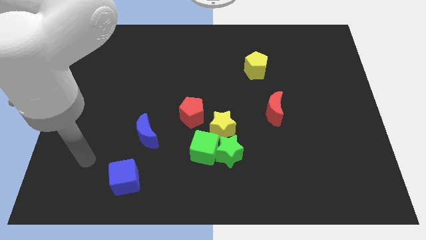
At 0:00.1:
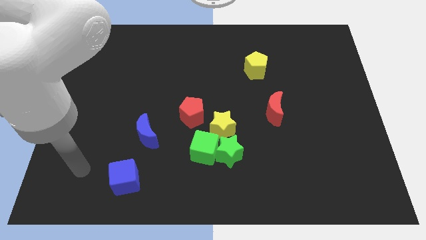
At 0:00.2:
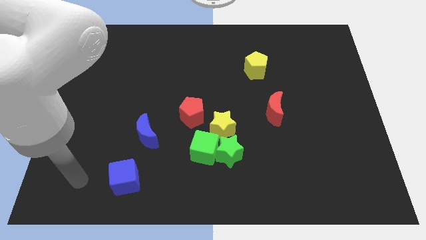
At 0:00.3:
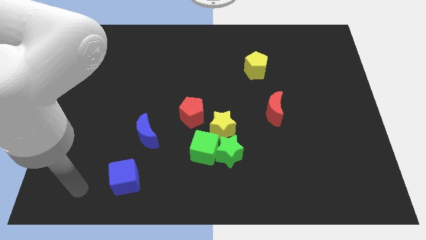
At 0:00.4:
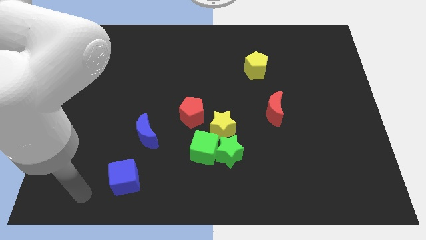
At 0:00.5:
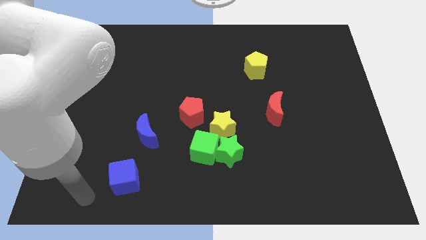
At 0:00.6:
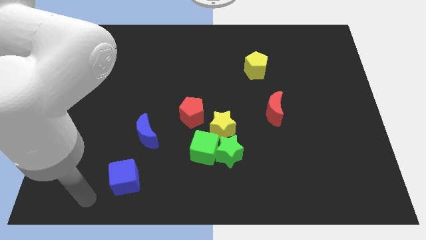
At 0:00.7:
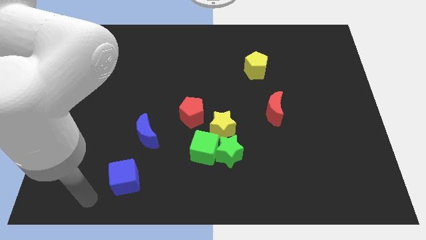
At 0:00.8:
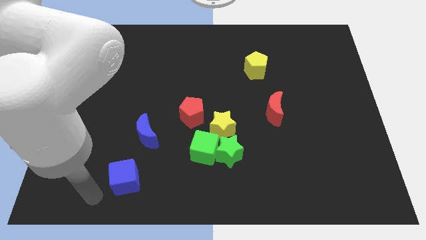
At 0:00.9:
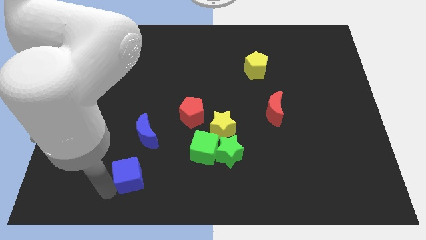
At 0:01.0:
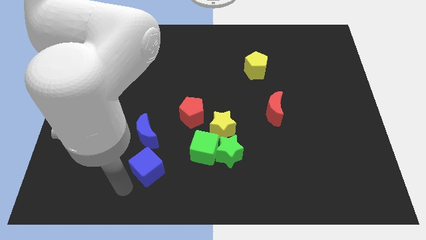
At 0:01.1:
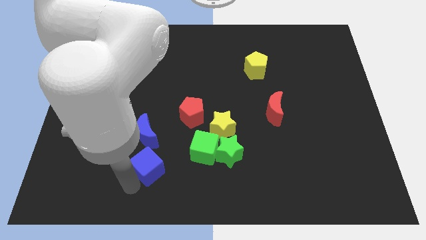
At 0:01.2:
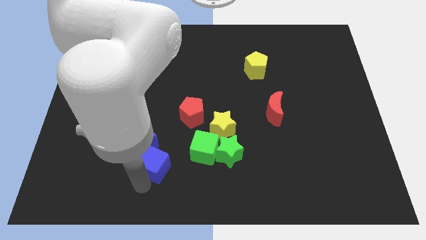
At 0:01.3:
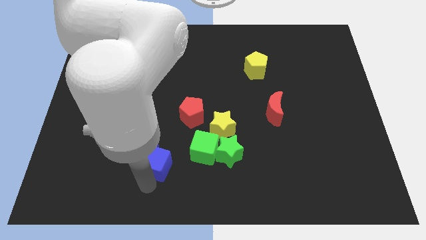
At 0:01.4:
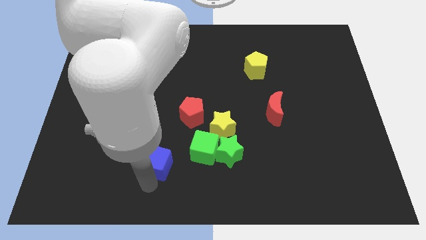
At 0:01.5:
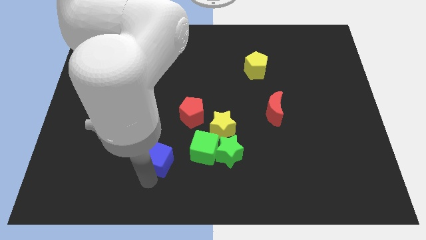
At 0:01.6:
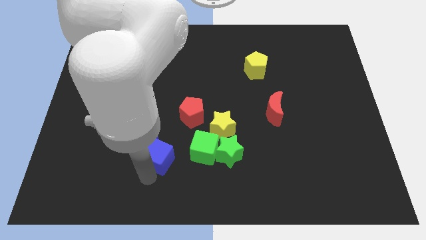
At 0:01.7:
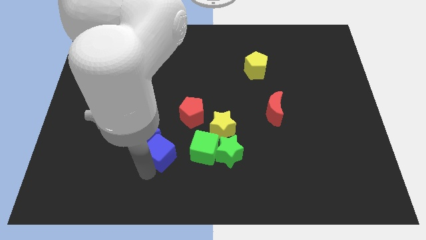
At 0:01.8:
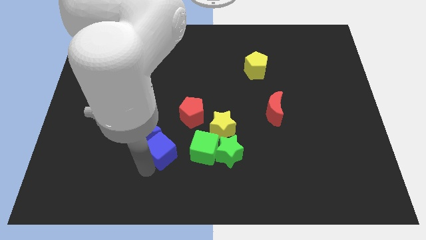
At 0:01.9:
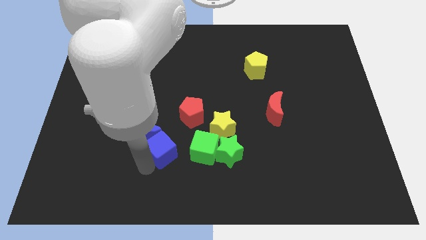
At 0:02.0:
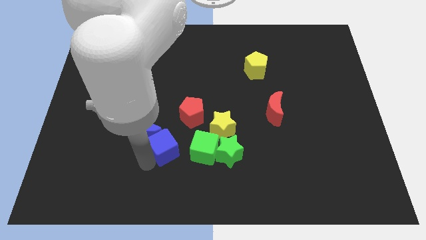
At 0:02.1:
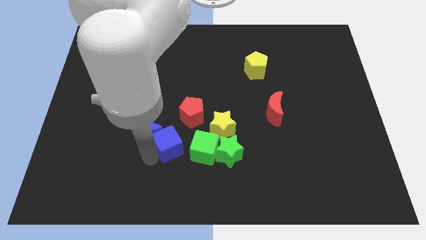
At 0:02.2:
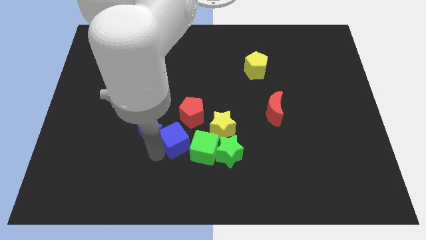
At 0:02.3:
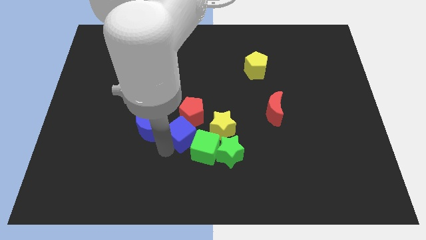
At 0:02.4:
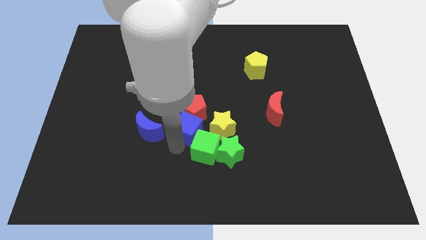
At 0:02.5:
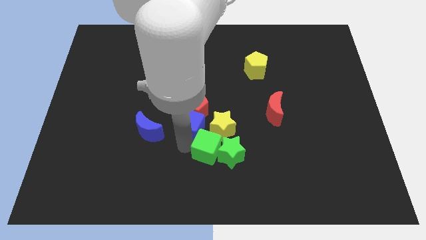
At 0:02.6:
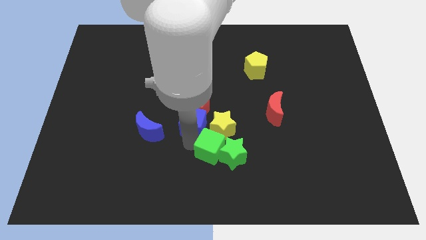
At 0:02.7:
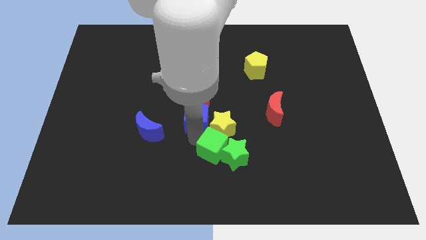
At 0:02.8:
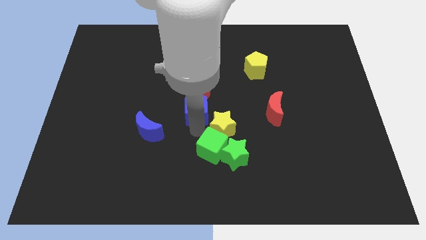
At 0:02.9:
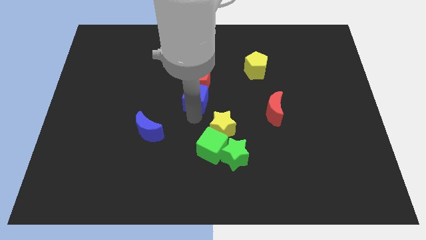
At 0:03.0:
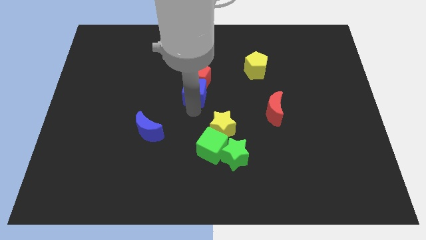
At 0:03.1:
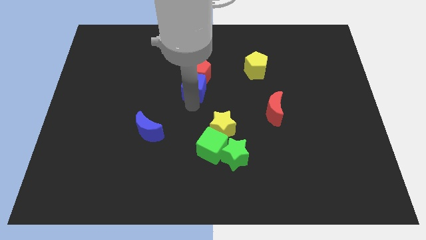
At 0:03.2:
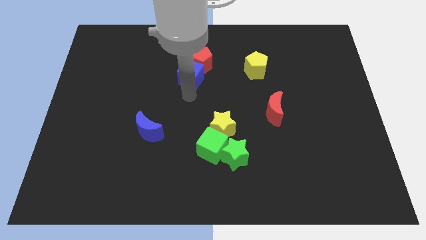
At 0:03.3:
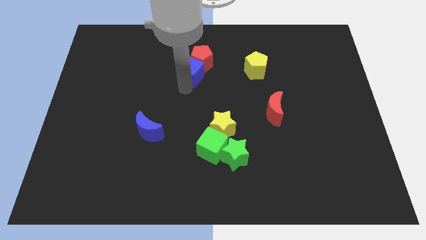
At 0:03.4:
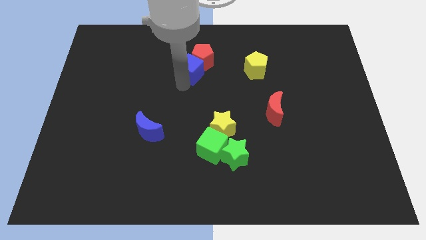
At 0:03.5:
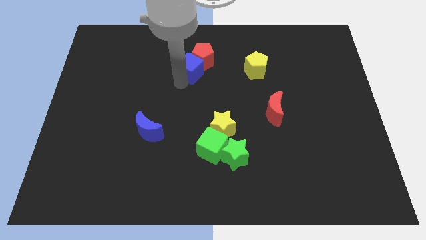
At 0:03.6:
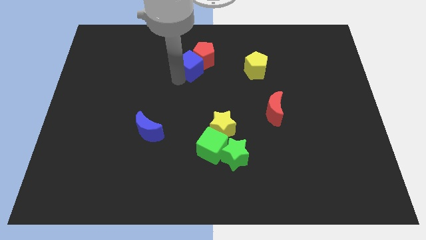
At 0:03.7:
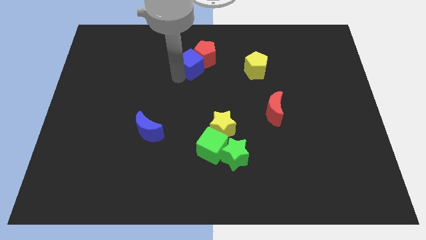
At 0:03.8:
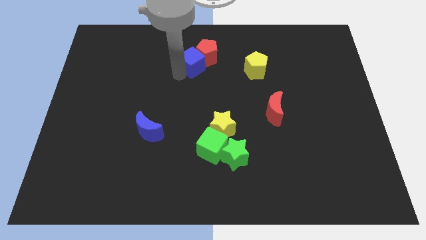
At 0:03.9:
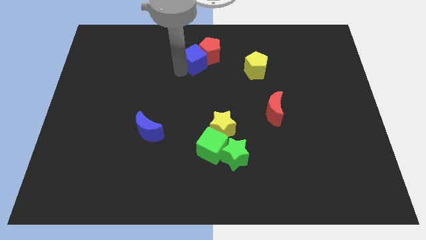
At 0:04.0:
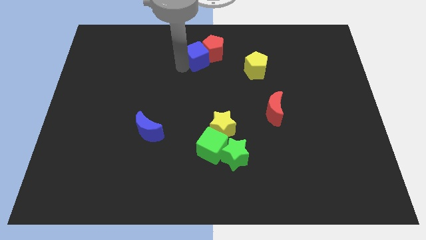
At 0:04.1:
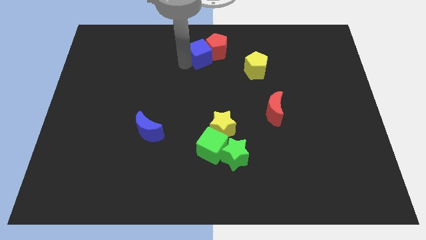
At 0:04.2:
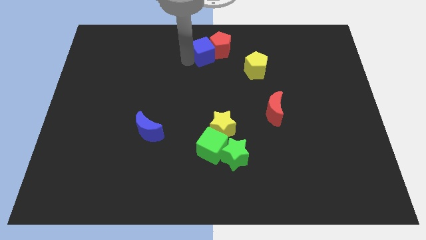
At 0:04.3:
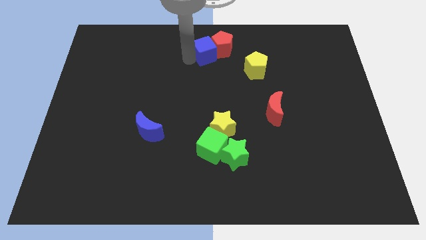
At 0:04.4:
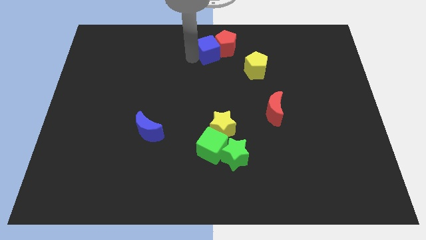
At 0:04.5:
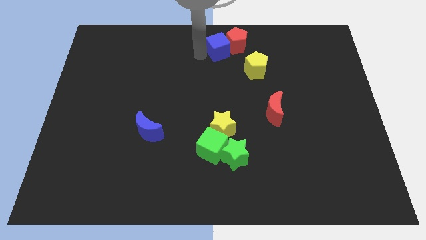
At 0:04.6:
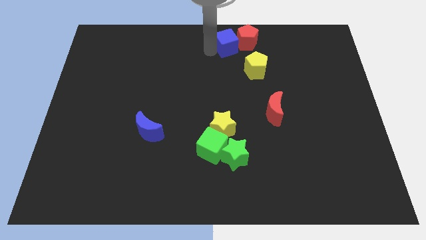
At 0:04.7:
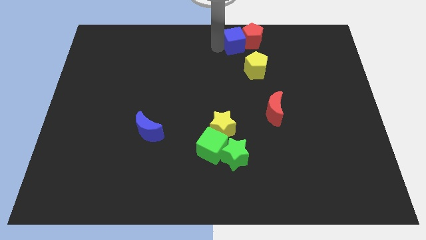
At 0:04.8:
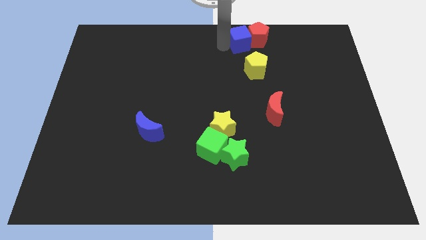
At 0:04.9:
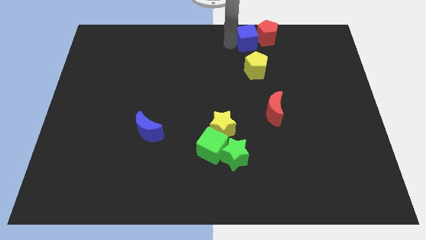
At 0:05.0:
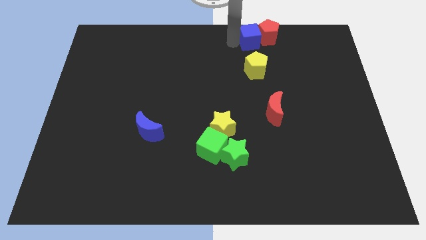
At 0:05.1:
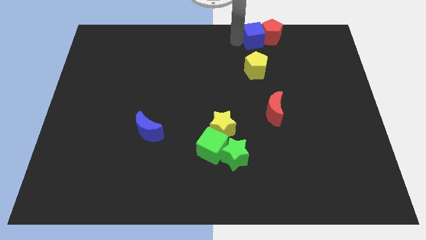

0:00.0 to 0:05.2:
place the blue cube along withe red pentagon above the yellow pentagon

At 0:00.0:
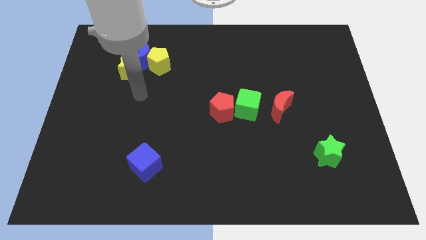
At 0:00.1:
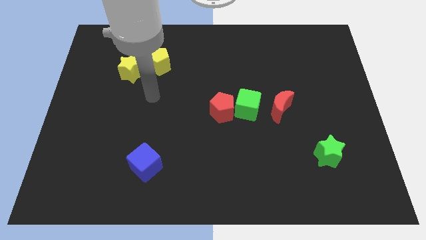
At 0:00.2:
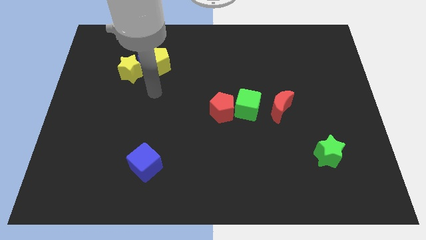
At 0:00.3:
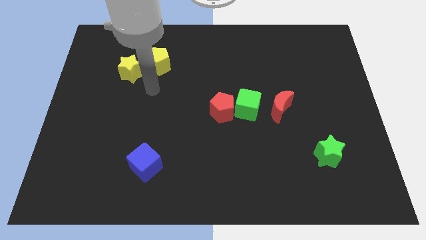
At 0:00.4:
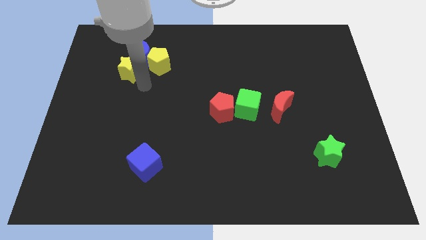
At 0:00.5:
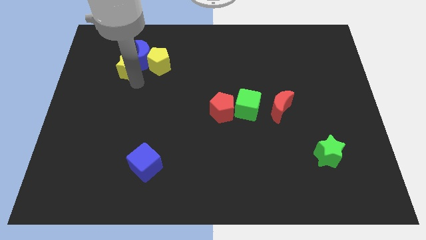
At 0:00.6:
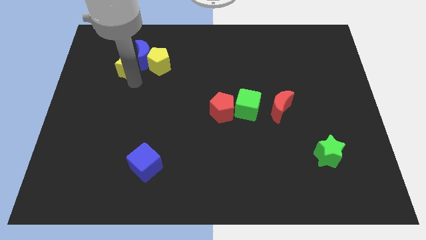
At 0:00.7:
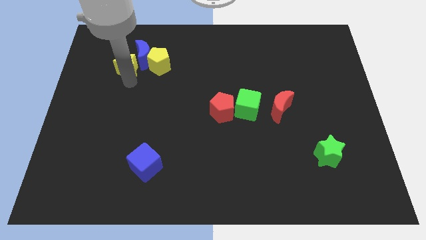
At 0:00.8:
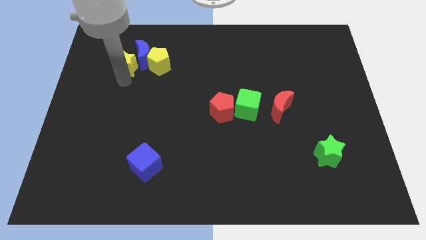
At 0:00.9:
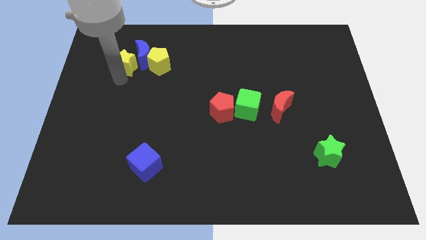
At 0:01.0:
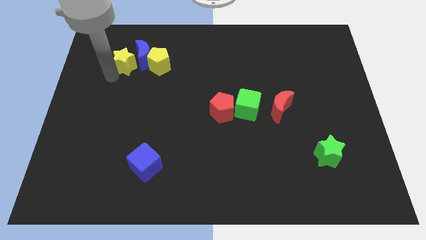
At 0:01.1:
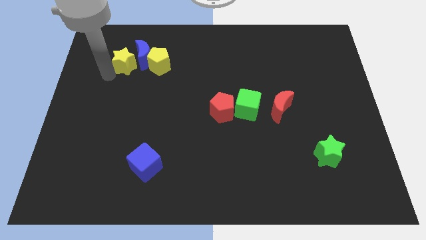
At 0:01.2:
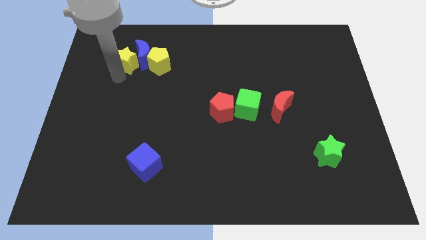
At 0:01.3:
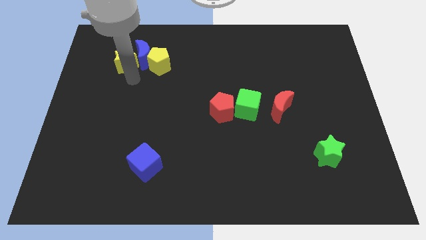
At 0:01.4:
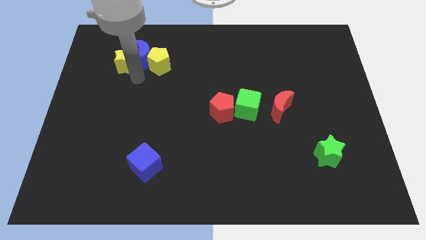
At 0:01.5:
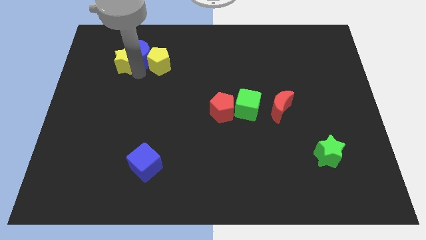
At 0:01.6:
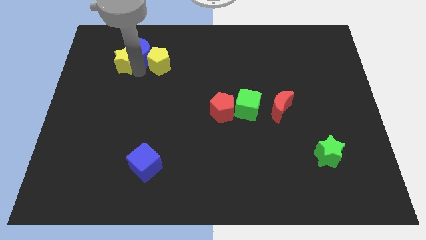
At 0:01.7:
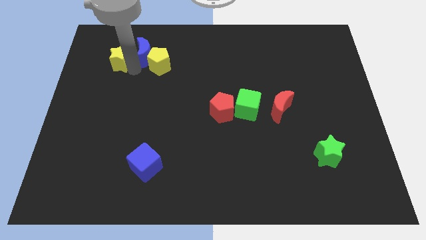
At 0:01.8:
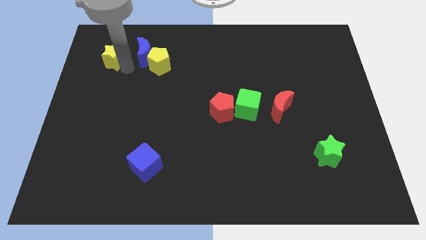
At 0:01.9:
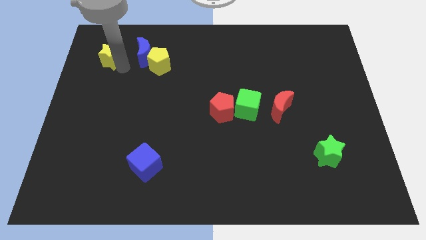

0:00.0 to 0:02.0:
separate the yellow star away from the blue crescent

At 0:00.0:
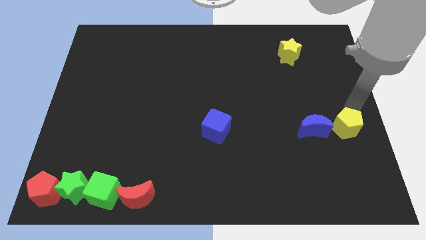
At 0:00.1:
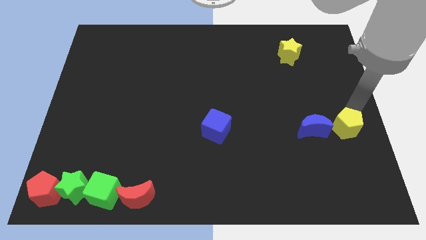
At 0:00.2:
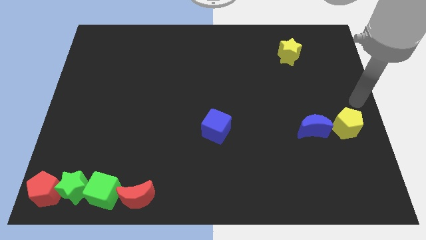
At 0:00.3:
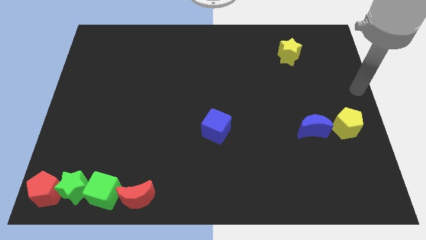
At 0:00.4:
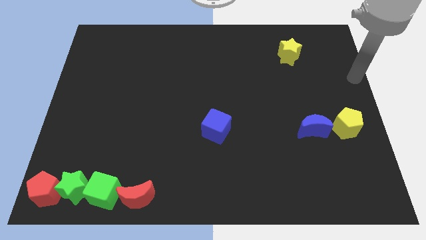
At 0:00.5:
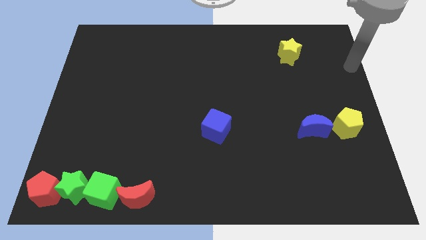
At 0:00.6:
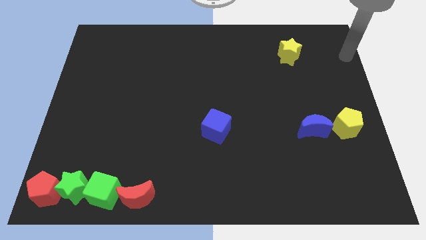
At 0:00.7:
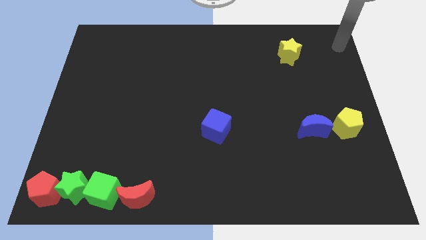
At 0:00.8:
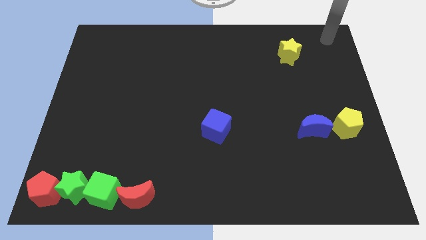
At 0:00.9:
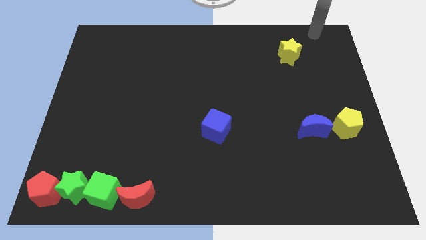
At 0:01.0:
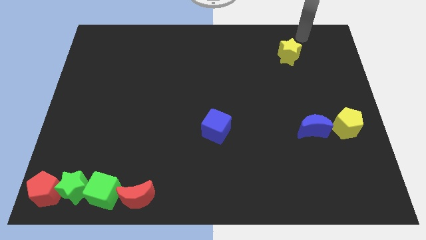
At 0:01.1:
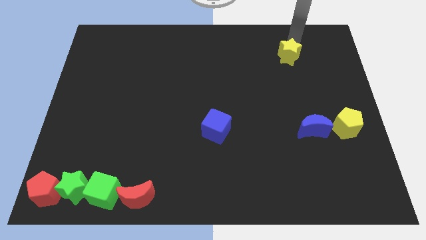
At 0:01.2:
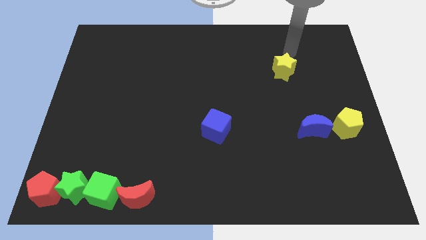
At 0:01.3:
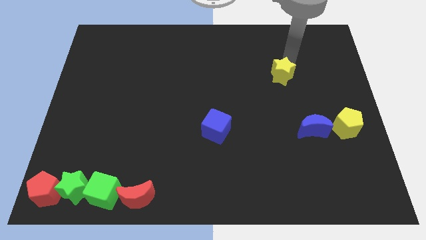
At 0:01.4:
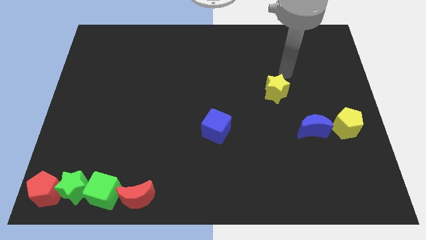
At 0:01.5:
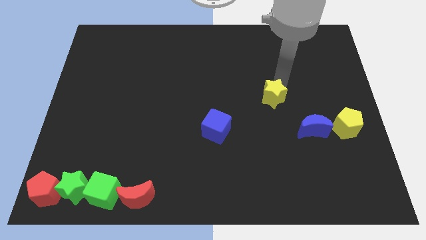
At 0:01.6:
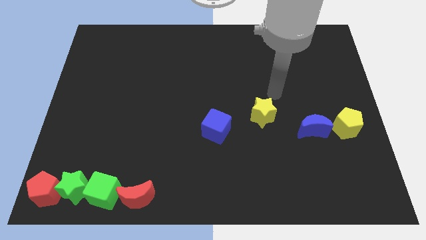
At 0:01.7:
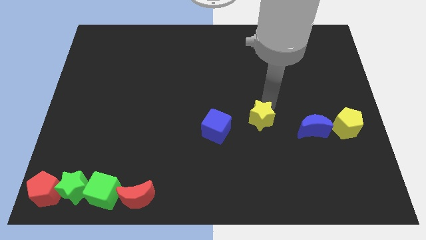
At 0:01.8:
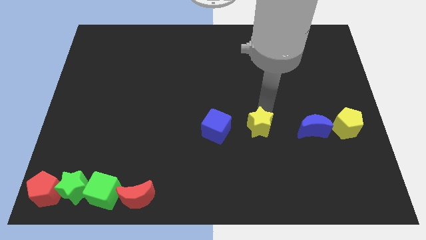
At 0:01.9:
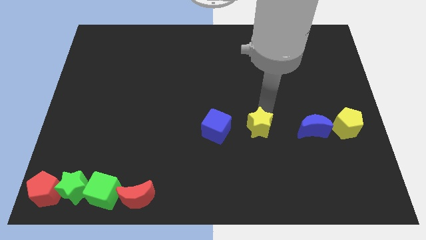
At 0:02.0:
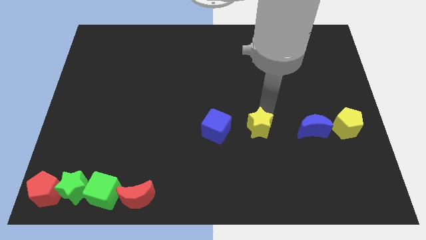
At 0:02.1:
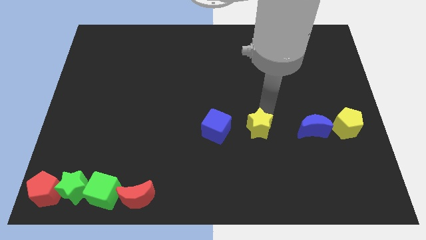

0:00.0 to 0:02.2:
place yellow star between blue moon and blue cube
